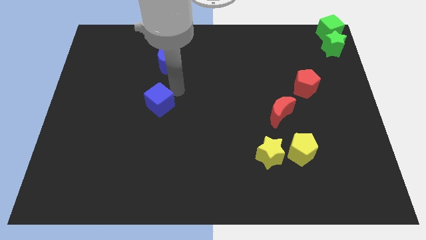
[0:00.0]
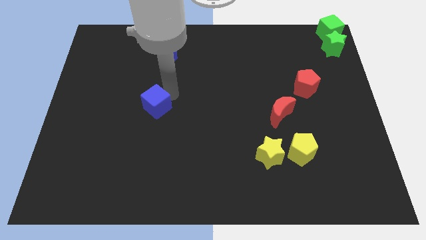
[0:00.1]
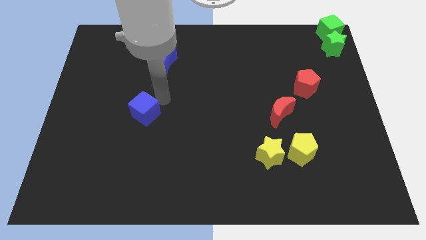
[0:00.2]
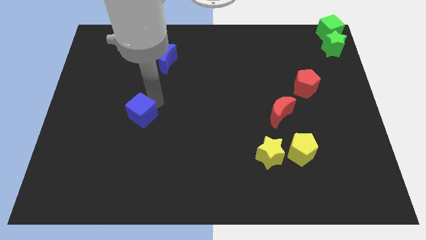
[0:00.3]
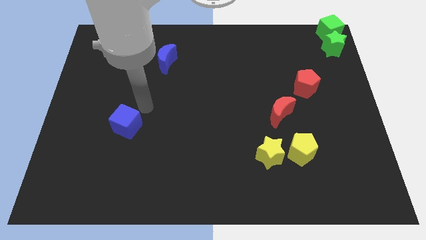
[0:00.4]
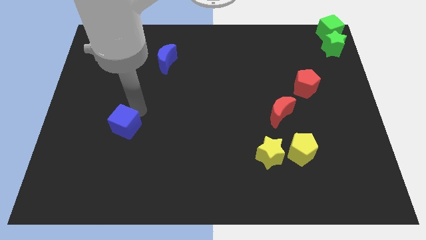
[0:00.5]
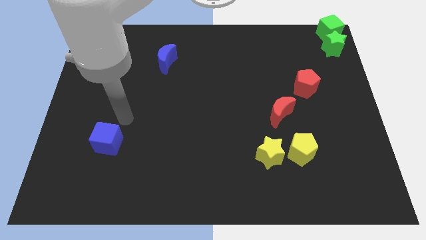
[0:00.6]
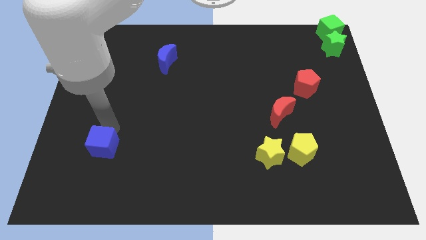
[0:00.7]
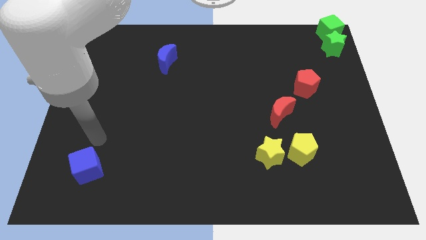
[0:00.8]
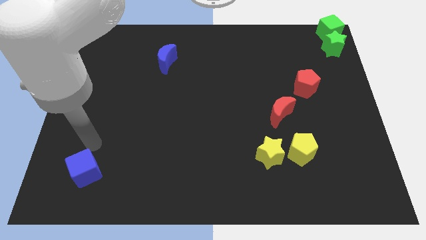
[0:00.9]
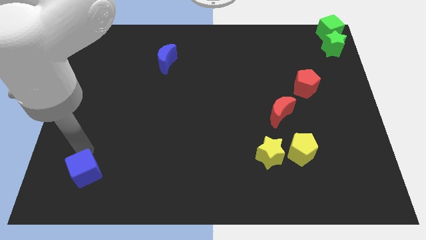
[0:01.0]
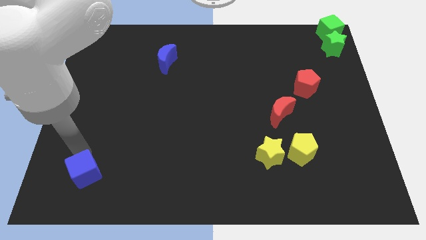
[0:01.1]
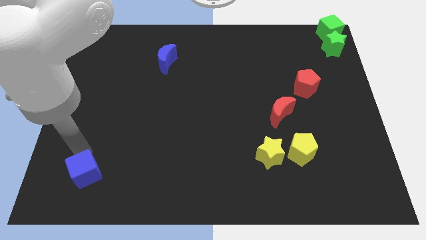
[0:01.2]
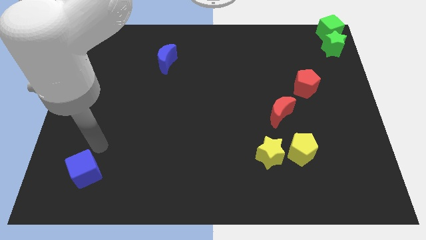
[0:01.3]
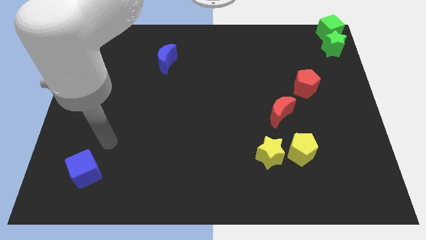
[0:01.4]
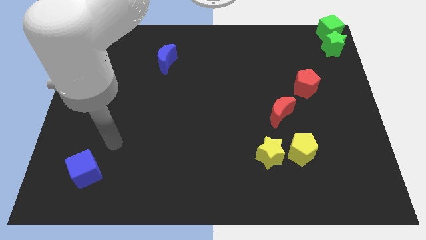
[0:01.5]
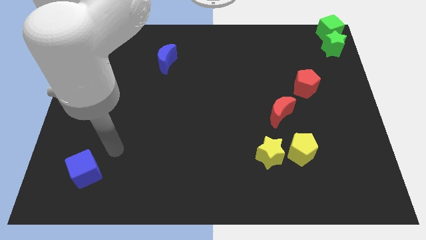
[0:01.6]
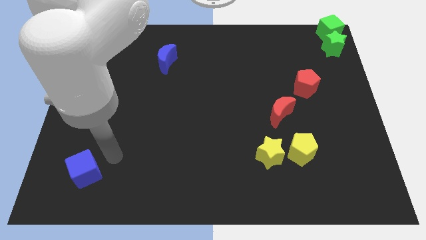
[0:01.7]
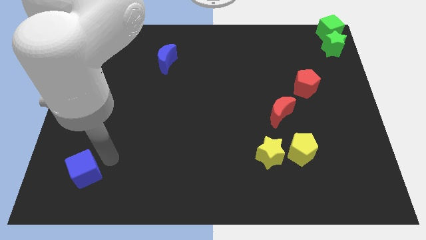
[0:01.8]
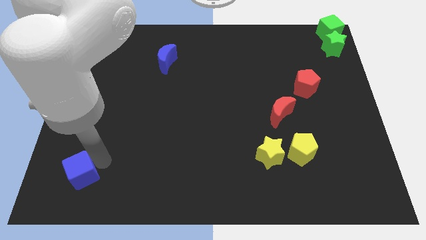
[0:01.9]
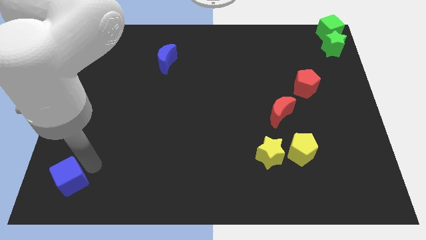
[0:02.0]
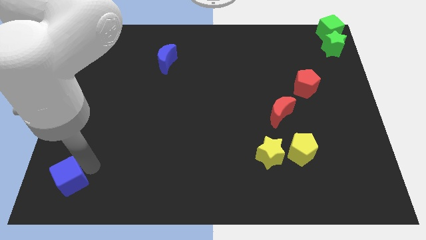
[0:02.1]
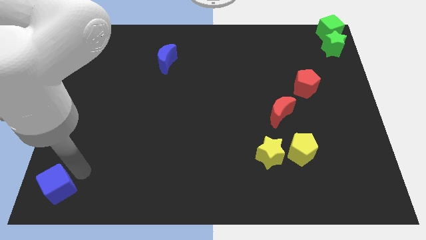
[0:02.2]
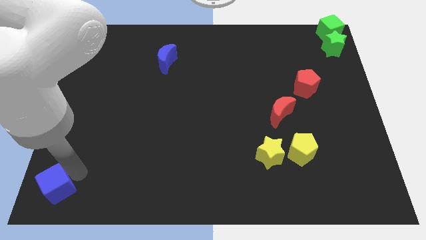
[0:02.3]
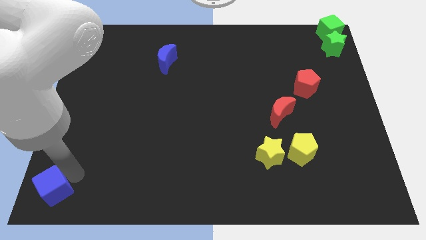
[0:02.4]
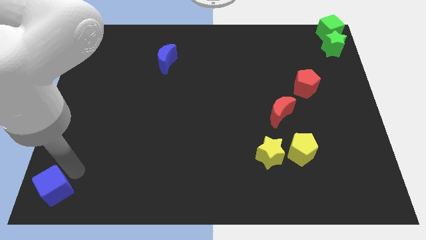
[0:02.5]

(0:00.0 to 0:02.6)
push the blue cube to the bottom left corner

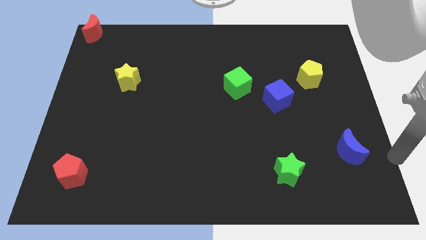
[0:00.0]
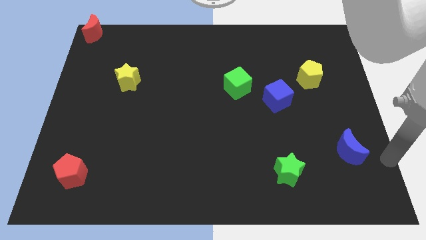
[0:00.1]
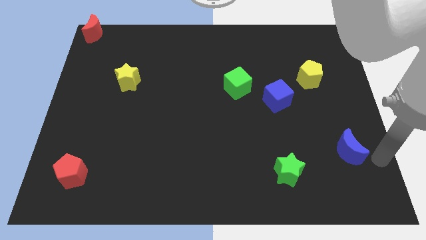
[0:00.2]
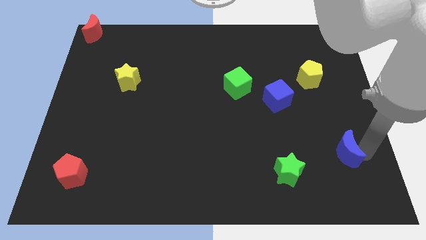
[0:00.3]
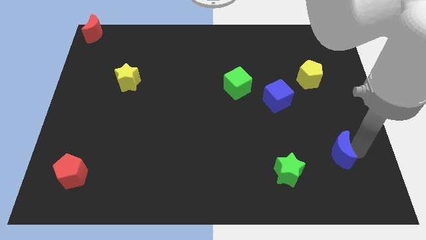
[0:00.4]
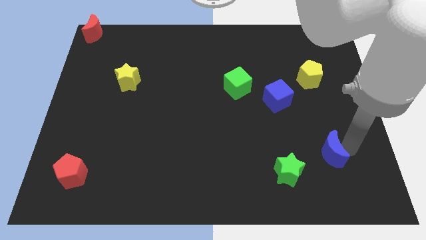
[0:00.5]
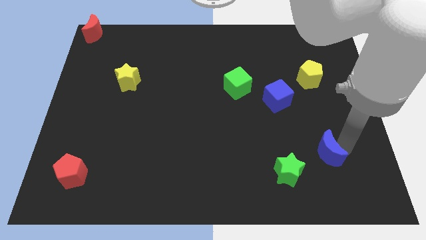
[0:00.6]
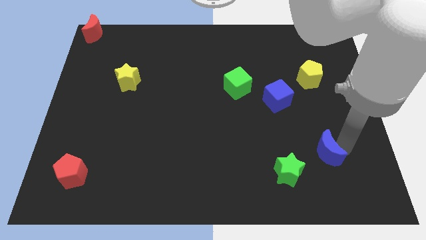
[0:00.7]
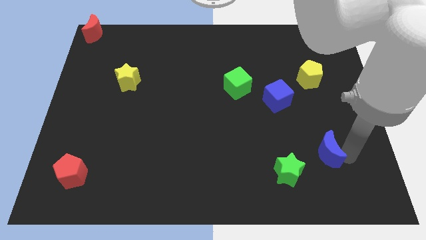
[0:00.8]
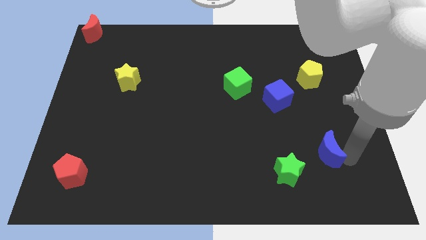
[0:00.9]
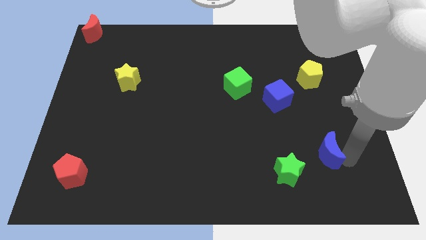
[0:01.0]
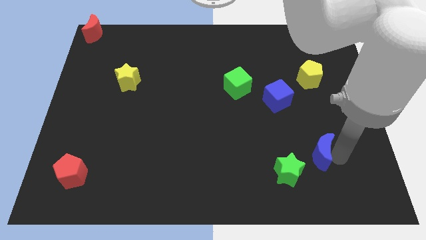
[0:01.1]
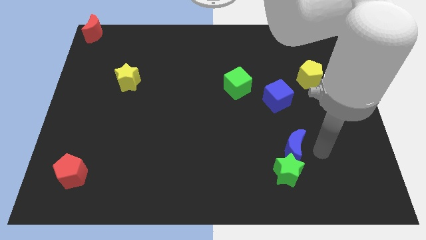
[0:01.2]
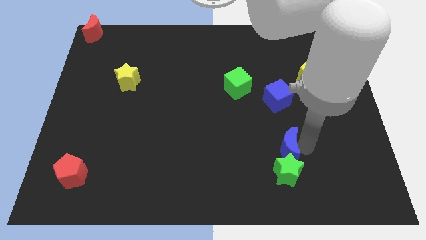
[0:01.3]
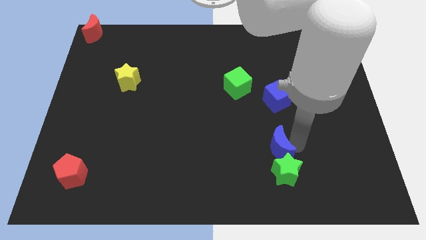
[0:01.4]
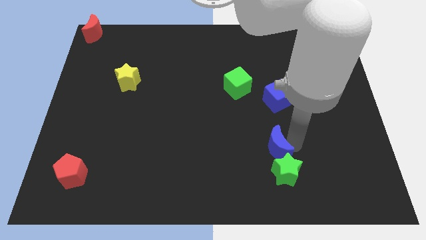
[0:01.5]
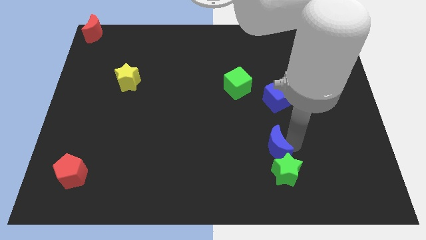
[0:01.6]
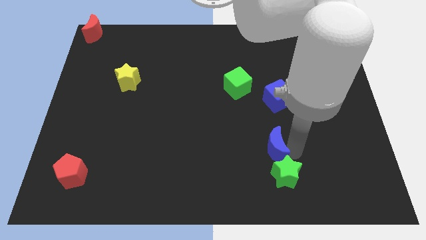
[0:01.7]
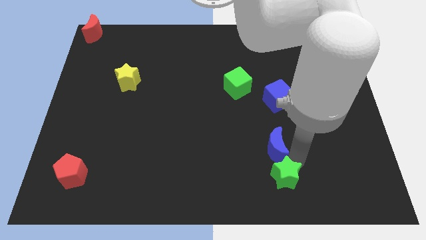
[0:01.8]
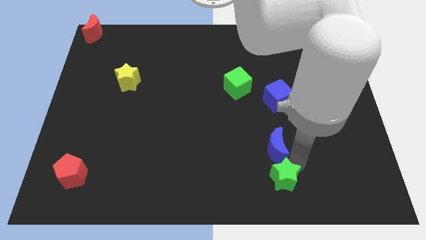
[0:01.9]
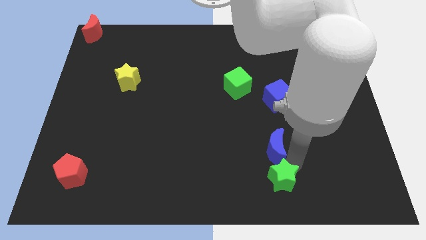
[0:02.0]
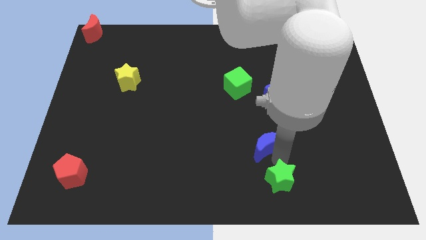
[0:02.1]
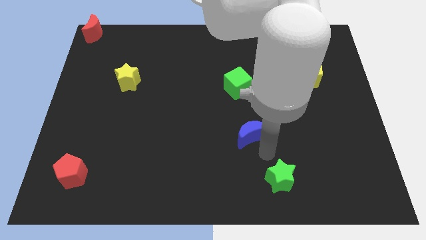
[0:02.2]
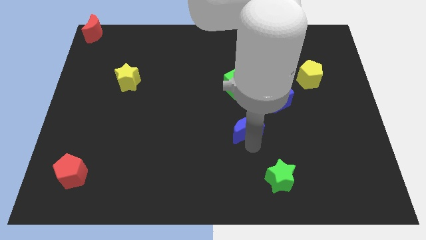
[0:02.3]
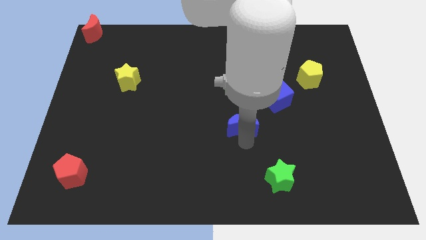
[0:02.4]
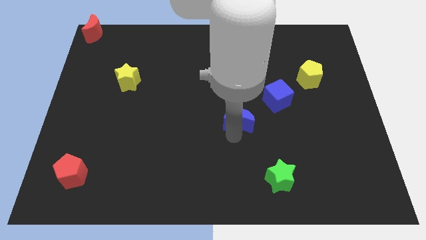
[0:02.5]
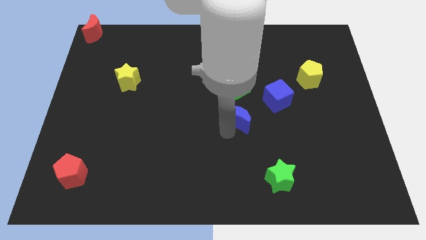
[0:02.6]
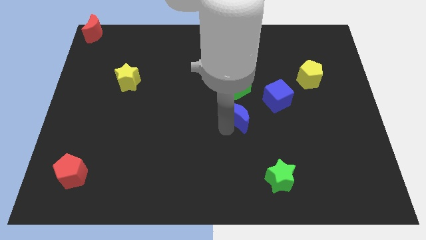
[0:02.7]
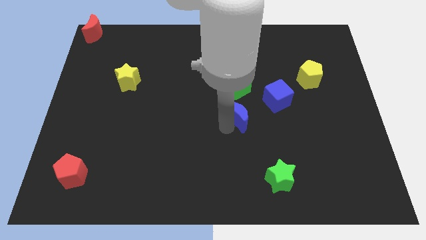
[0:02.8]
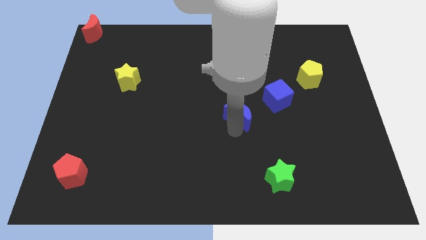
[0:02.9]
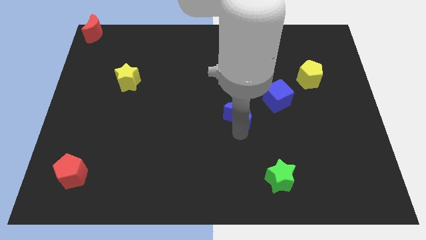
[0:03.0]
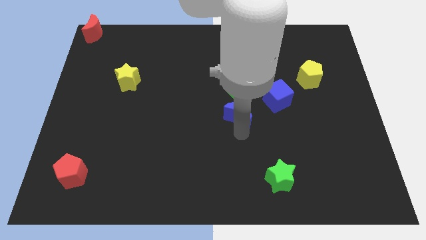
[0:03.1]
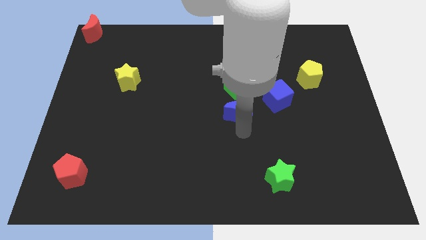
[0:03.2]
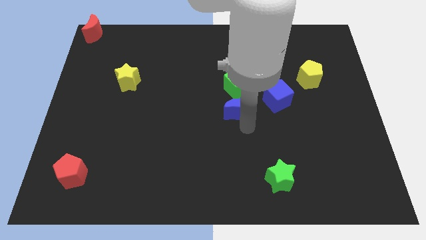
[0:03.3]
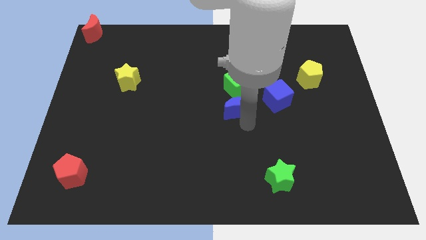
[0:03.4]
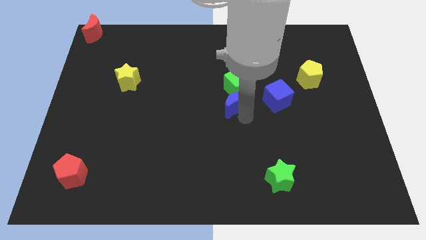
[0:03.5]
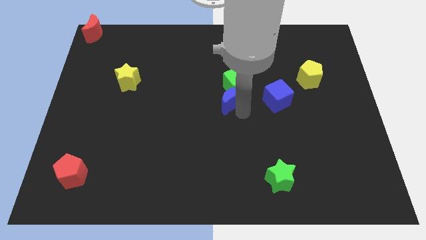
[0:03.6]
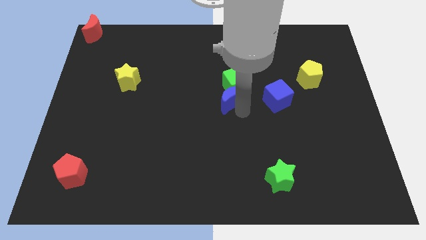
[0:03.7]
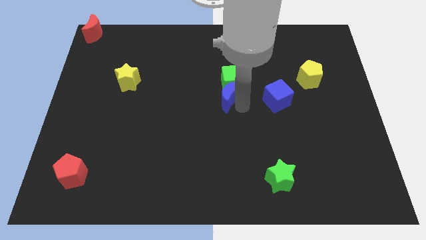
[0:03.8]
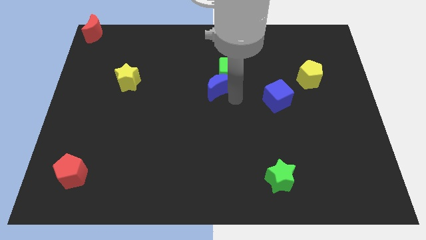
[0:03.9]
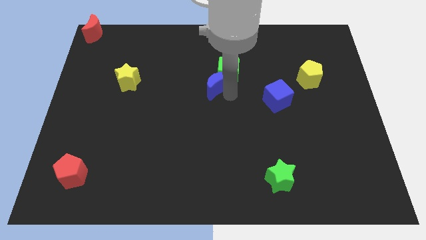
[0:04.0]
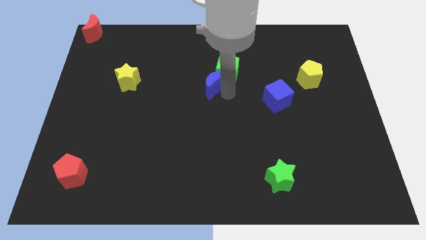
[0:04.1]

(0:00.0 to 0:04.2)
move the blue moon into the green cube

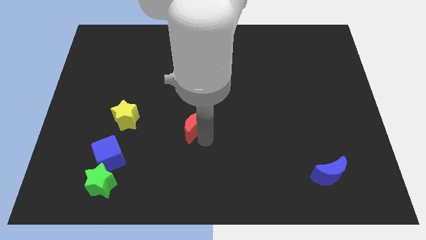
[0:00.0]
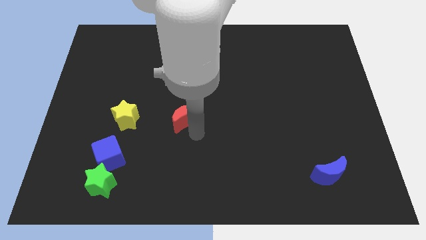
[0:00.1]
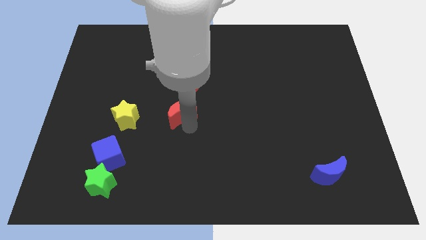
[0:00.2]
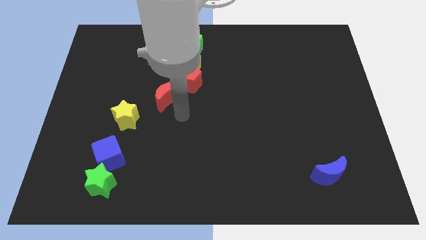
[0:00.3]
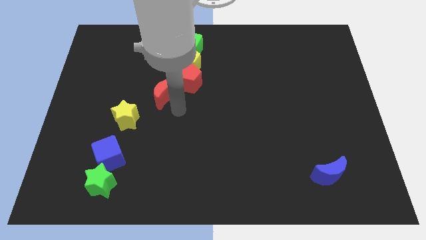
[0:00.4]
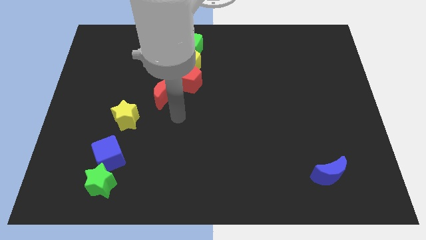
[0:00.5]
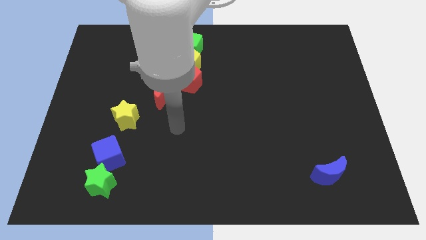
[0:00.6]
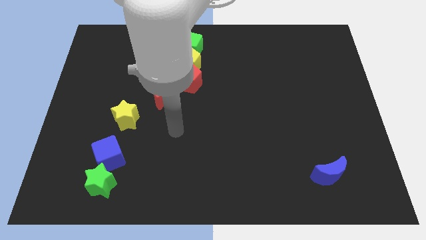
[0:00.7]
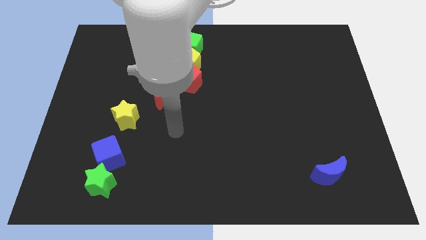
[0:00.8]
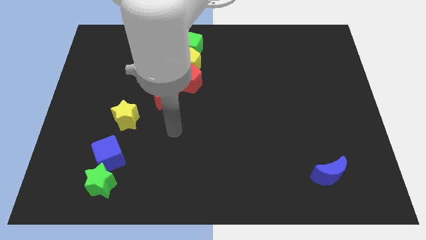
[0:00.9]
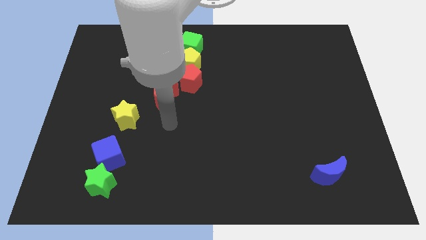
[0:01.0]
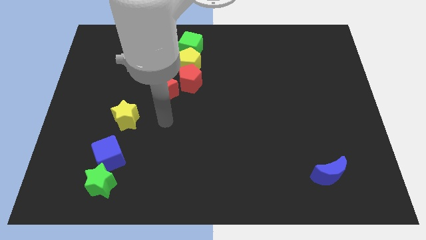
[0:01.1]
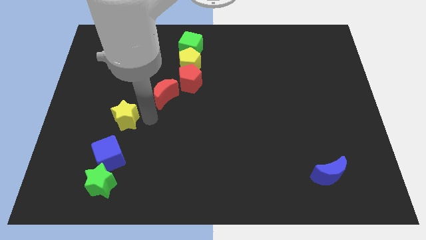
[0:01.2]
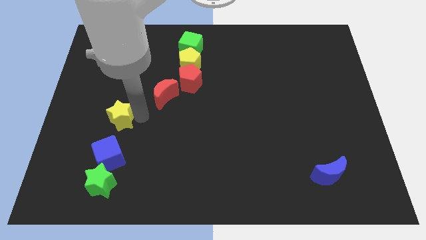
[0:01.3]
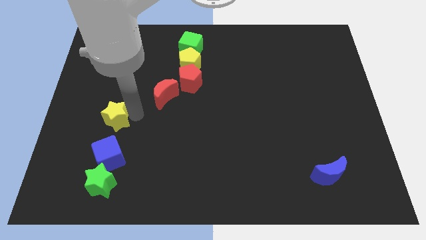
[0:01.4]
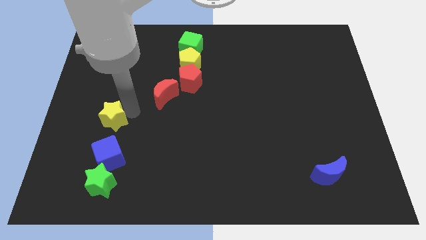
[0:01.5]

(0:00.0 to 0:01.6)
move red moon to the bottom left of red pentagon

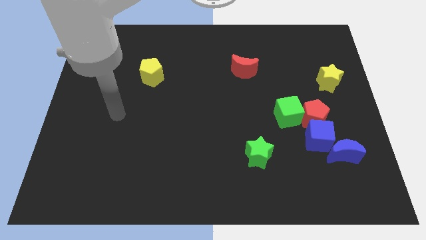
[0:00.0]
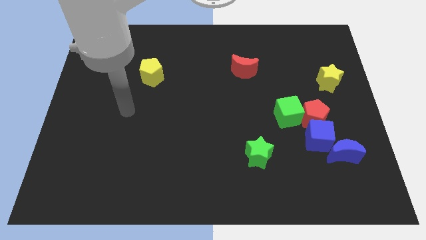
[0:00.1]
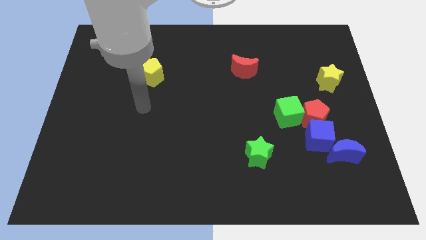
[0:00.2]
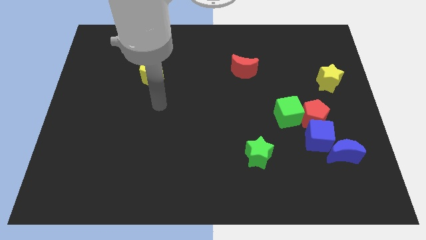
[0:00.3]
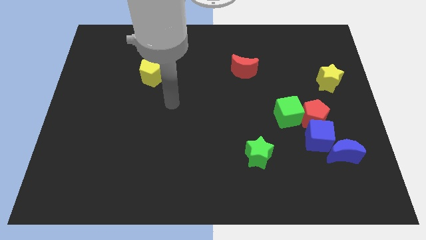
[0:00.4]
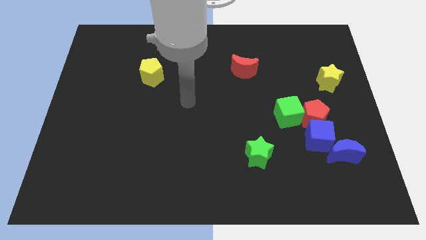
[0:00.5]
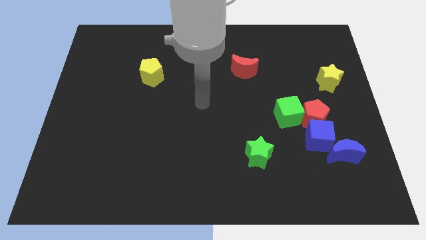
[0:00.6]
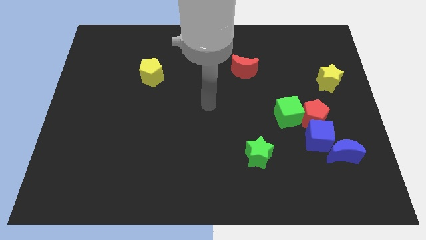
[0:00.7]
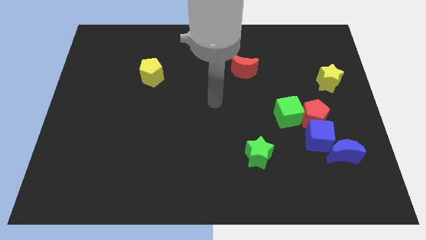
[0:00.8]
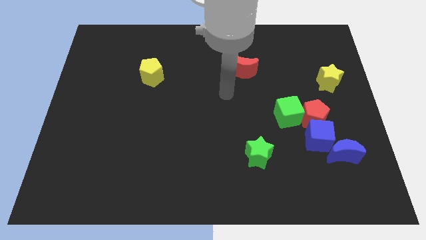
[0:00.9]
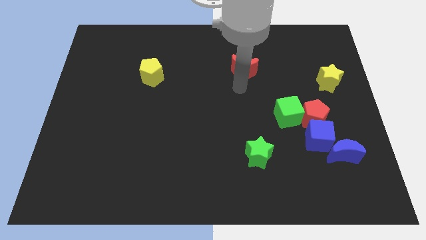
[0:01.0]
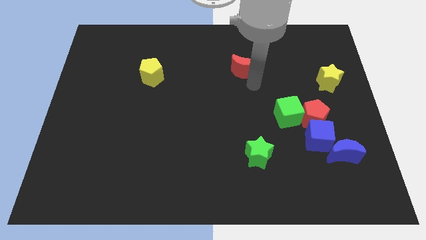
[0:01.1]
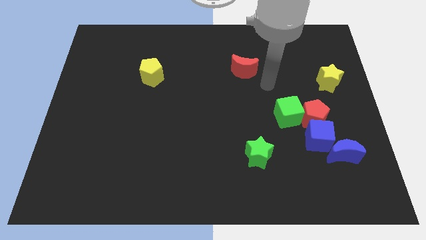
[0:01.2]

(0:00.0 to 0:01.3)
move your arm close to the red moon
